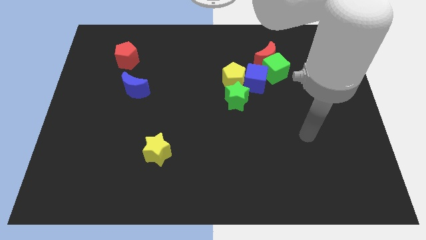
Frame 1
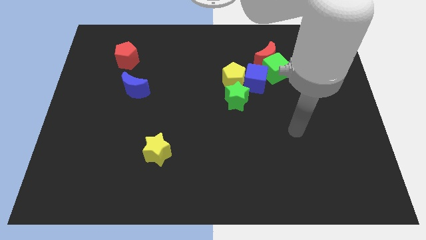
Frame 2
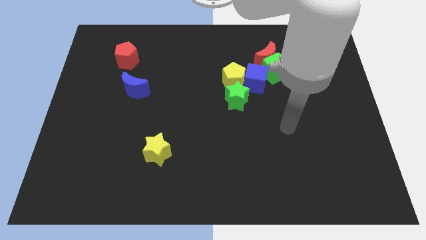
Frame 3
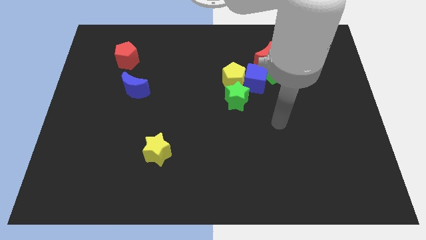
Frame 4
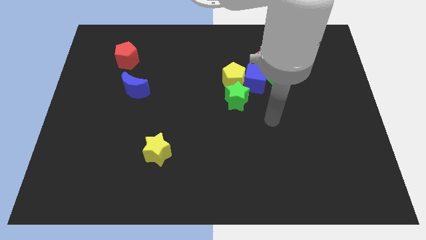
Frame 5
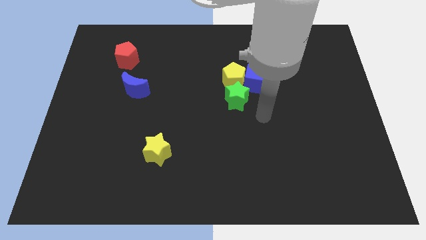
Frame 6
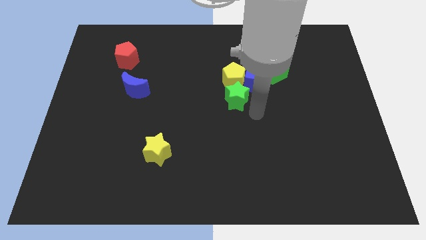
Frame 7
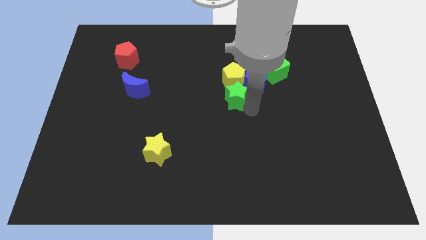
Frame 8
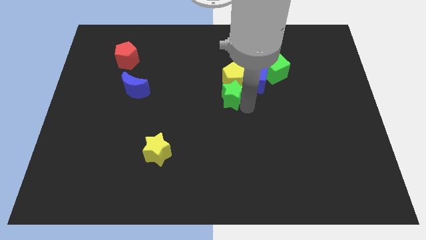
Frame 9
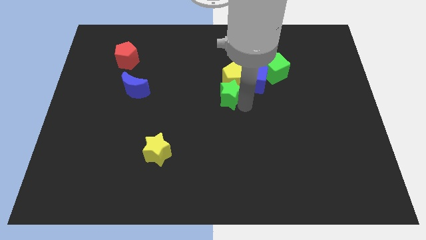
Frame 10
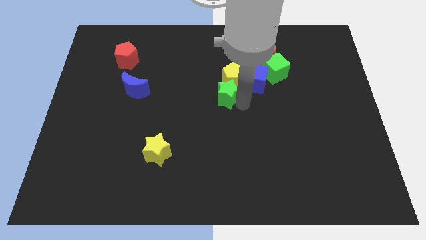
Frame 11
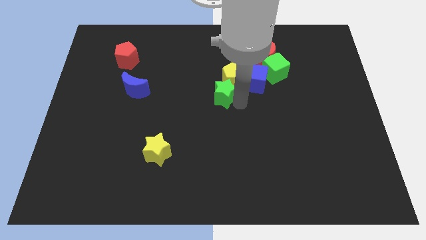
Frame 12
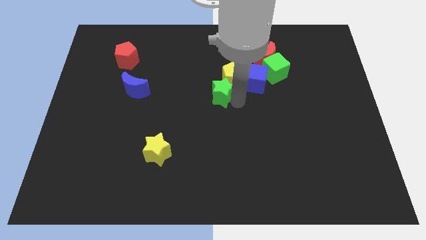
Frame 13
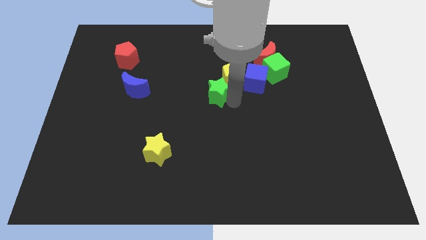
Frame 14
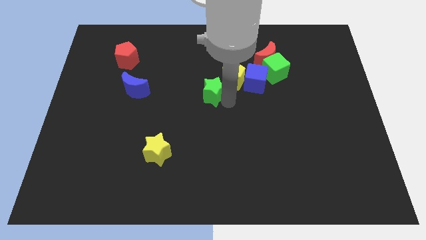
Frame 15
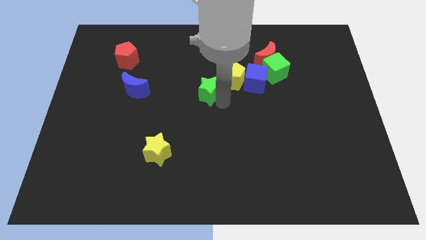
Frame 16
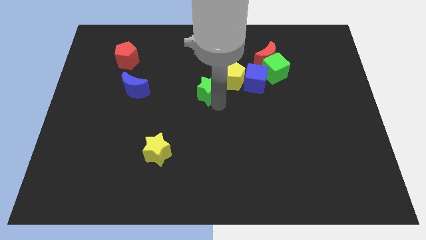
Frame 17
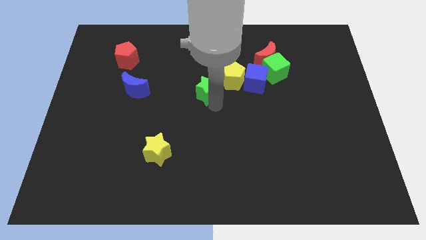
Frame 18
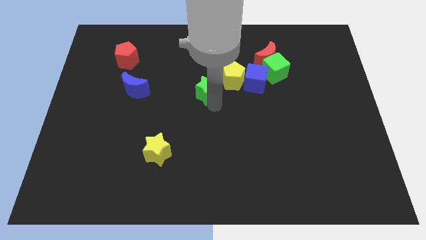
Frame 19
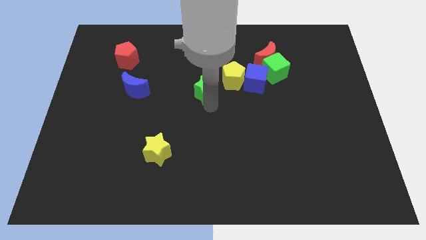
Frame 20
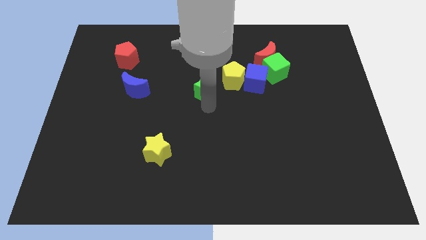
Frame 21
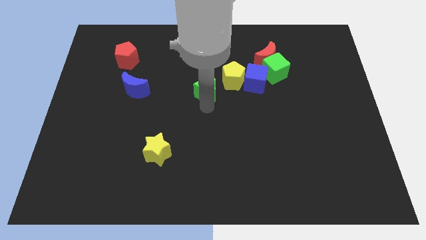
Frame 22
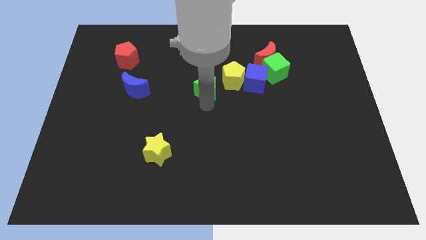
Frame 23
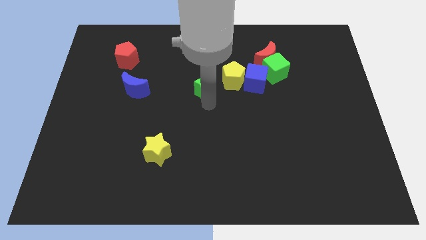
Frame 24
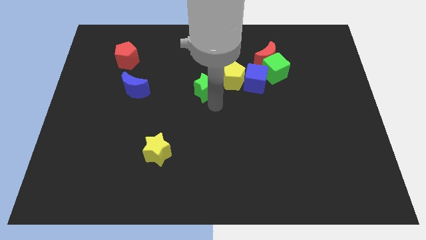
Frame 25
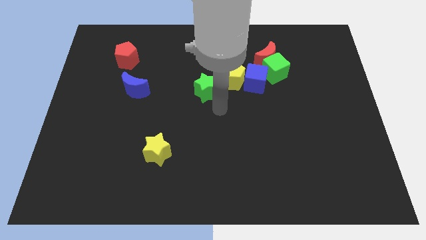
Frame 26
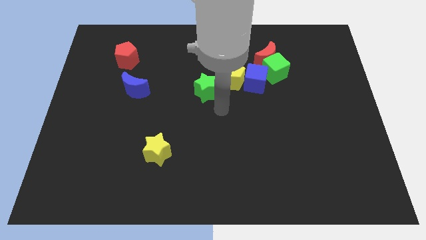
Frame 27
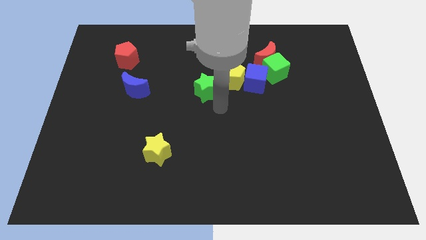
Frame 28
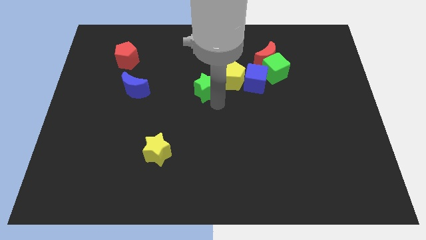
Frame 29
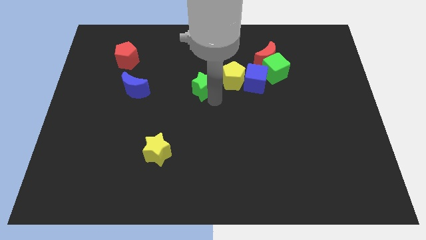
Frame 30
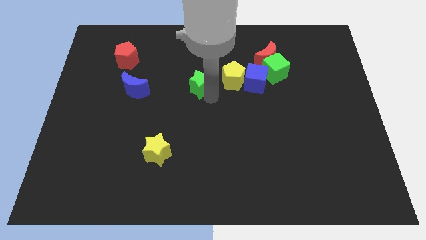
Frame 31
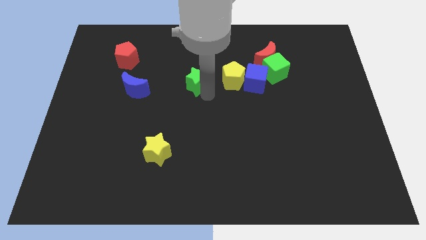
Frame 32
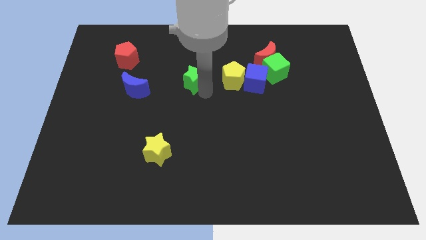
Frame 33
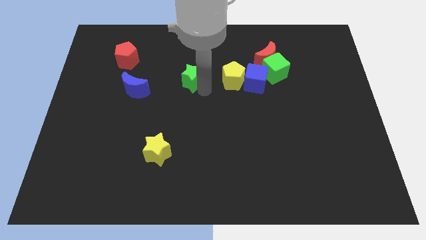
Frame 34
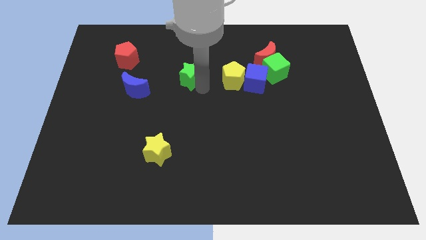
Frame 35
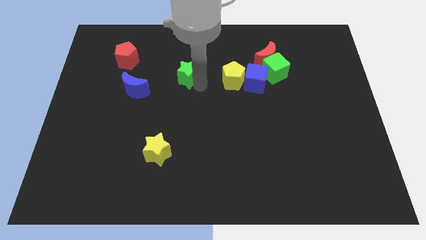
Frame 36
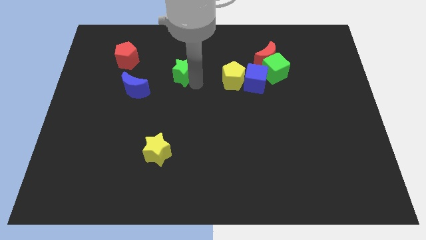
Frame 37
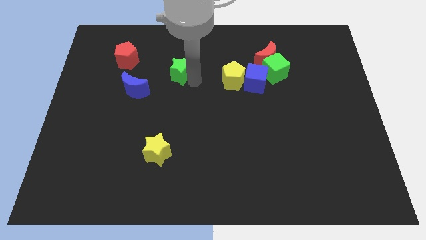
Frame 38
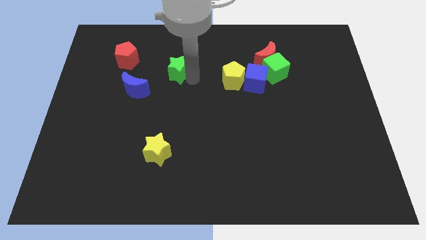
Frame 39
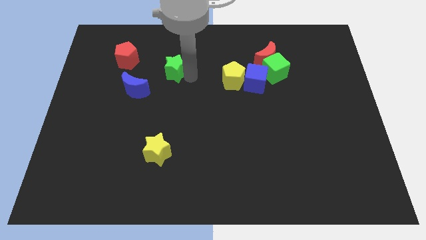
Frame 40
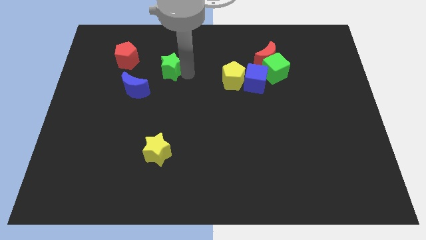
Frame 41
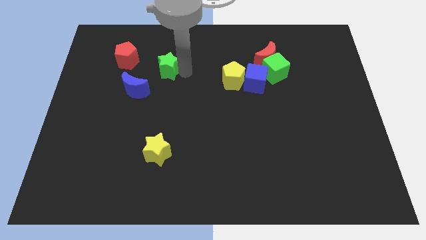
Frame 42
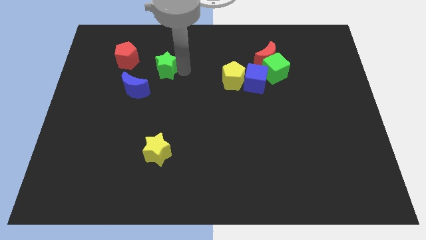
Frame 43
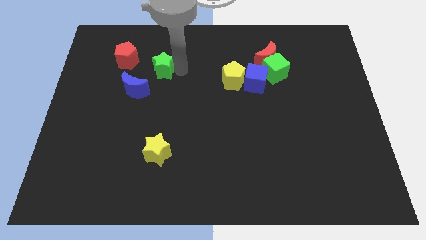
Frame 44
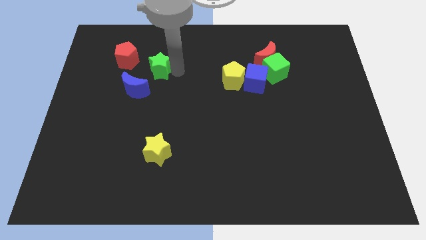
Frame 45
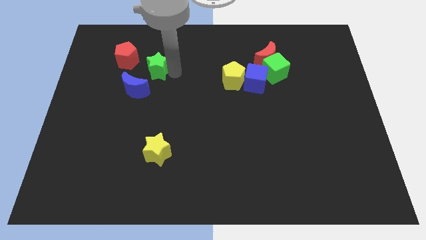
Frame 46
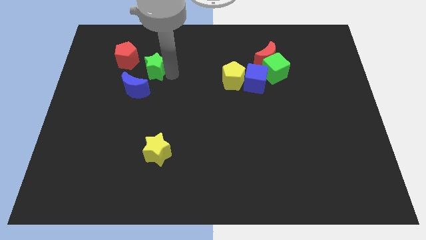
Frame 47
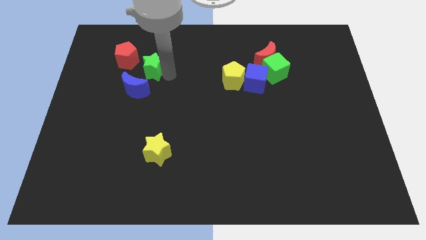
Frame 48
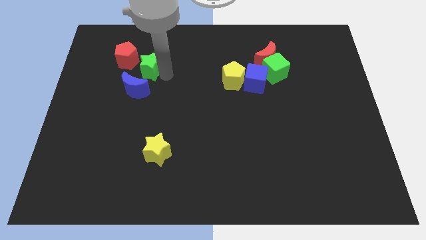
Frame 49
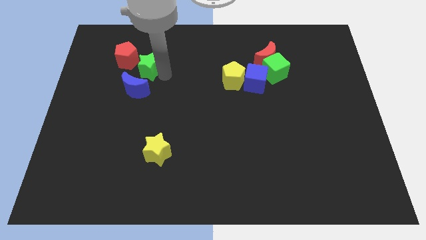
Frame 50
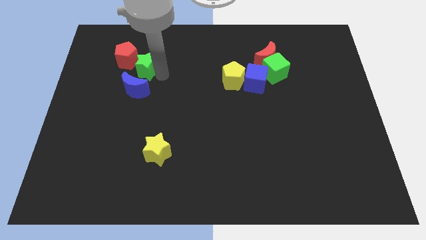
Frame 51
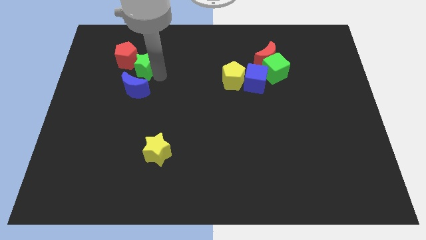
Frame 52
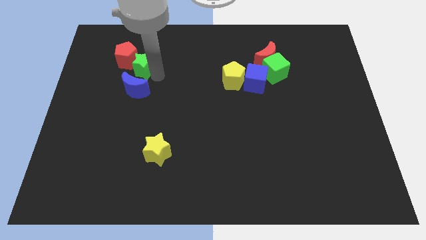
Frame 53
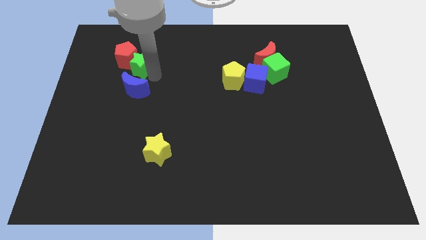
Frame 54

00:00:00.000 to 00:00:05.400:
move the green star towards the red pentagon

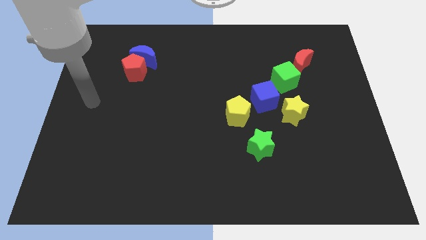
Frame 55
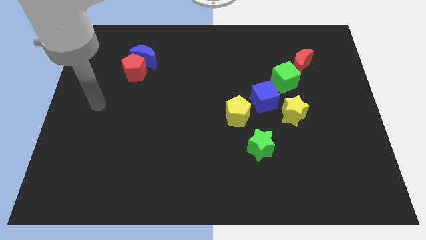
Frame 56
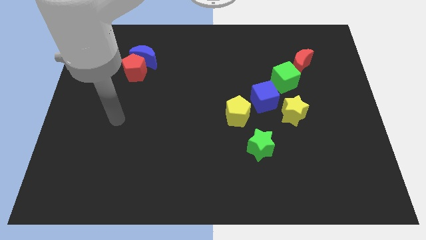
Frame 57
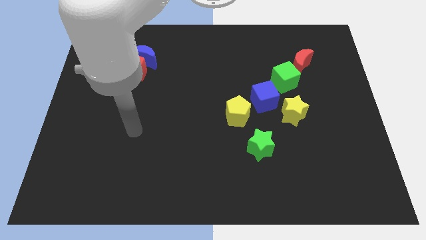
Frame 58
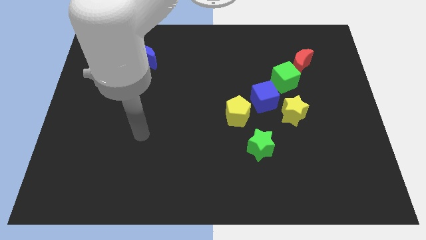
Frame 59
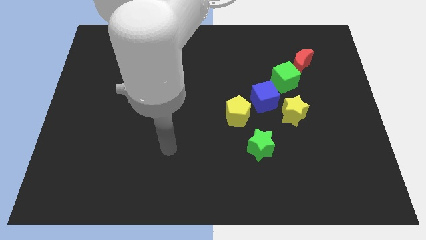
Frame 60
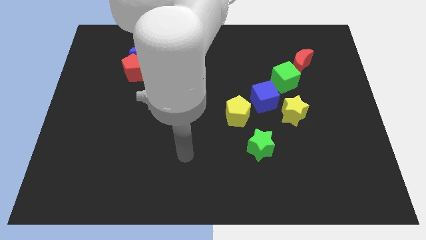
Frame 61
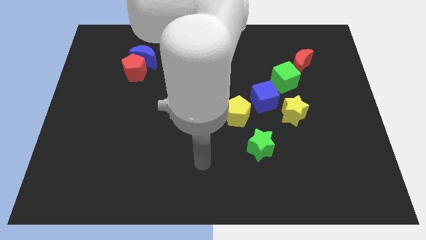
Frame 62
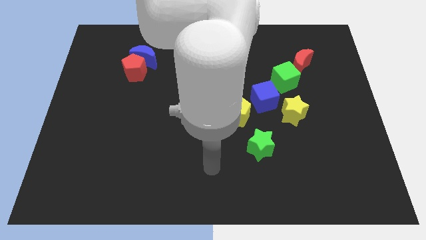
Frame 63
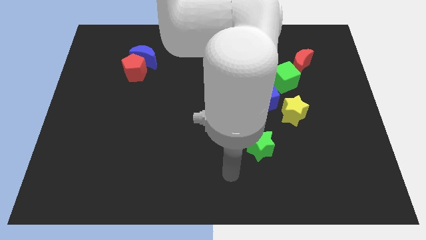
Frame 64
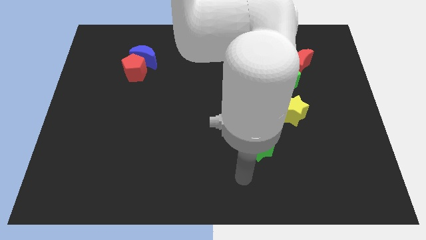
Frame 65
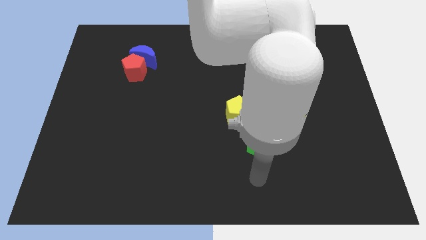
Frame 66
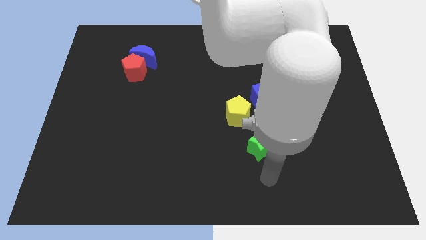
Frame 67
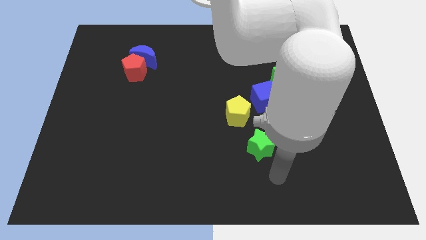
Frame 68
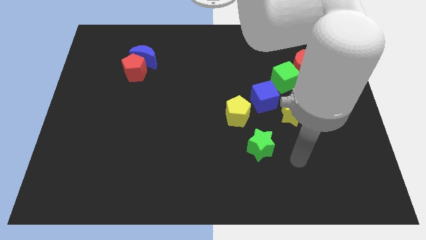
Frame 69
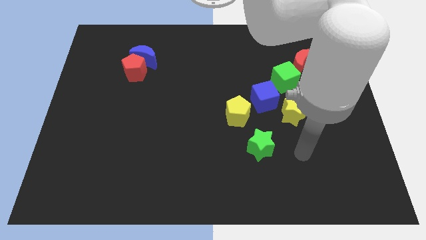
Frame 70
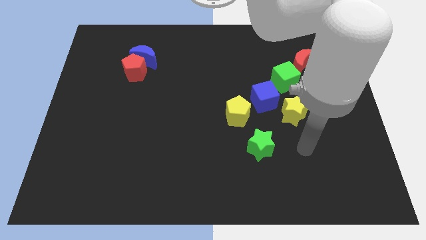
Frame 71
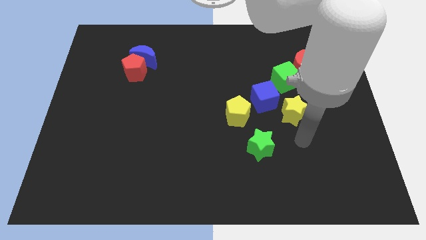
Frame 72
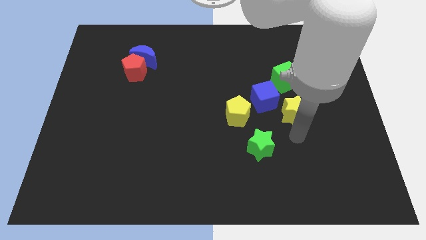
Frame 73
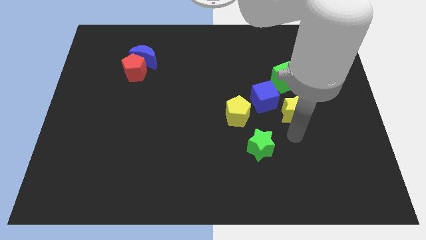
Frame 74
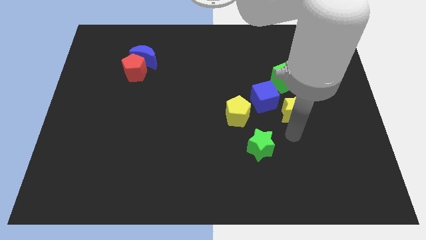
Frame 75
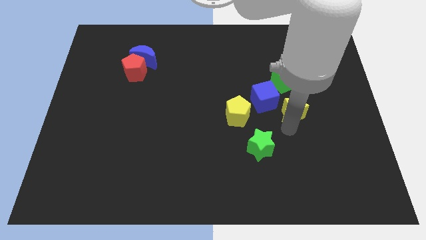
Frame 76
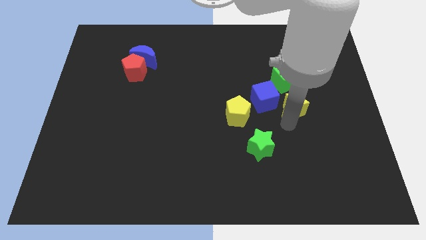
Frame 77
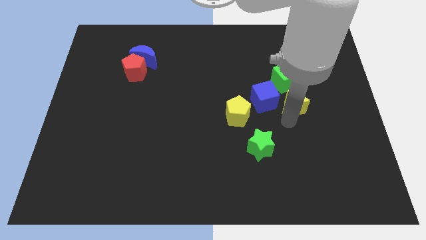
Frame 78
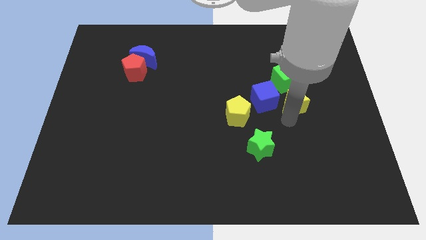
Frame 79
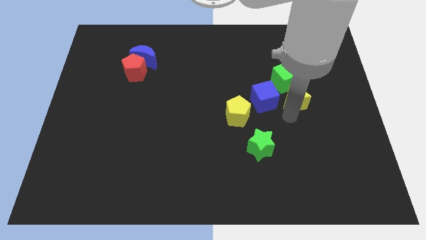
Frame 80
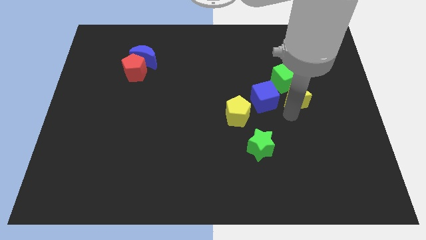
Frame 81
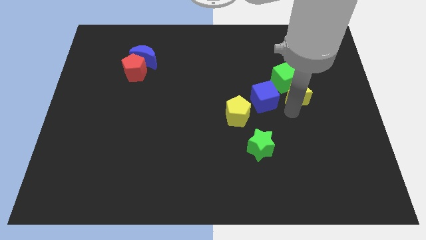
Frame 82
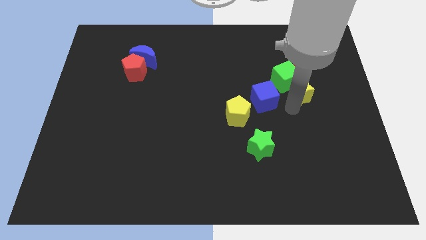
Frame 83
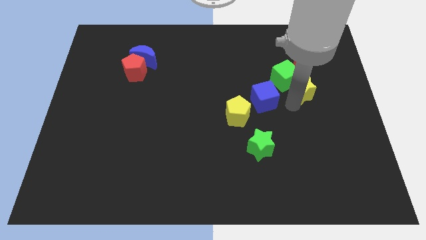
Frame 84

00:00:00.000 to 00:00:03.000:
move the yellow star towards the green cube

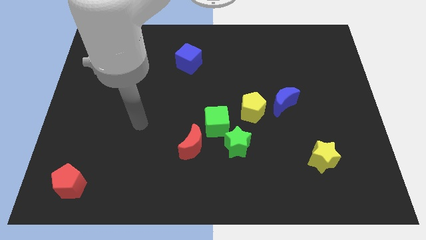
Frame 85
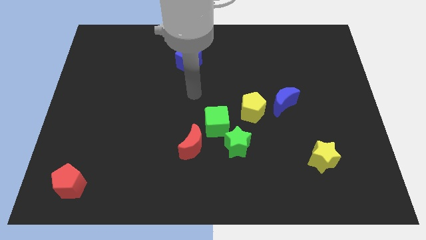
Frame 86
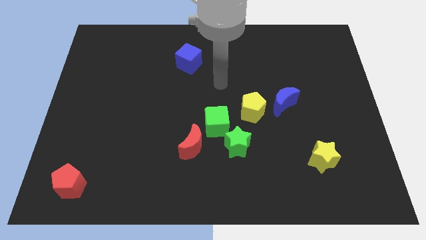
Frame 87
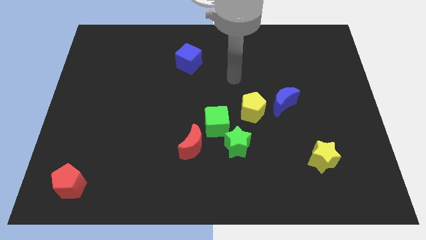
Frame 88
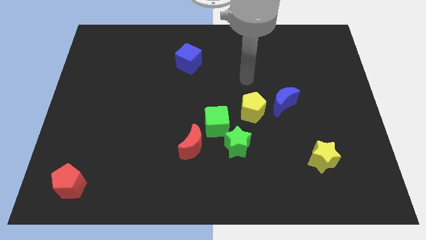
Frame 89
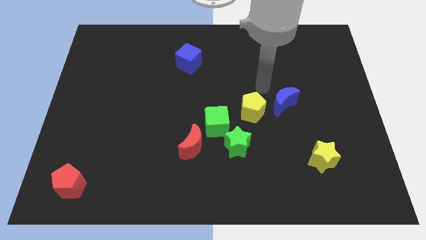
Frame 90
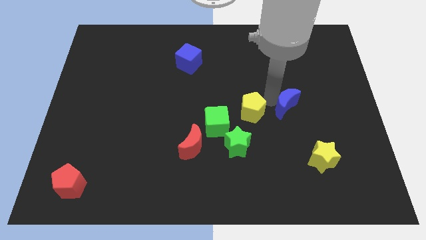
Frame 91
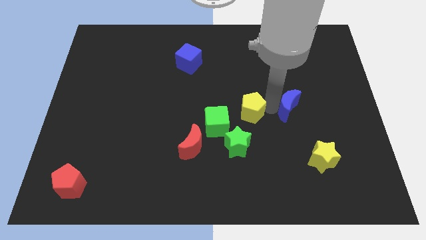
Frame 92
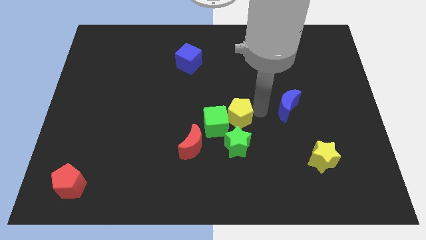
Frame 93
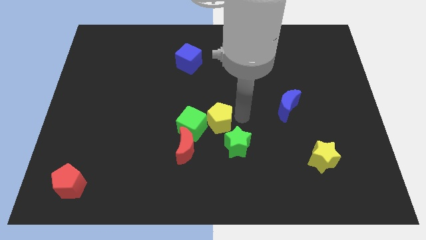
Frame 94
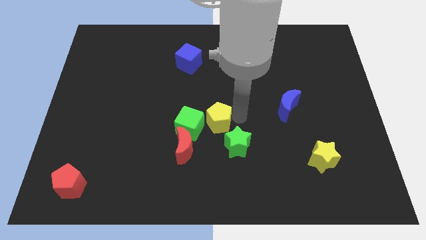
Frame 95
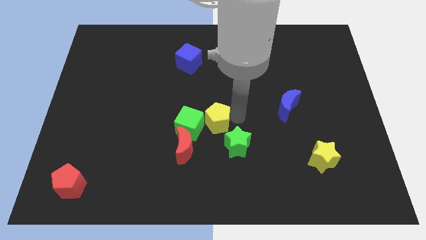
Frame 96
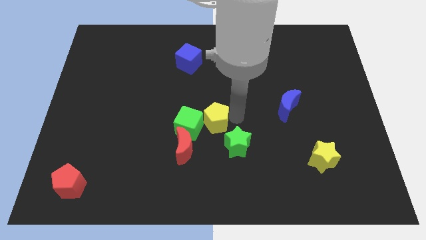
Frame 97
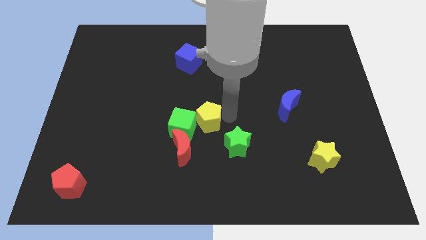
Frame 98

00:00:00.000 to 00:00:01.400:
slide the yellow pentagon towards the green cube
